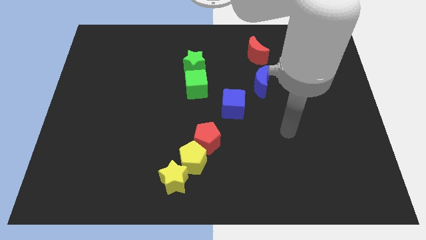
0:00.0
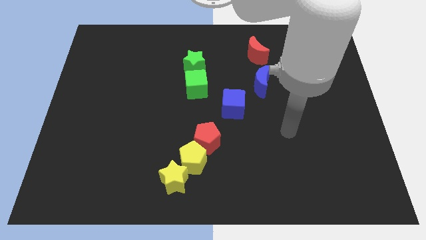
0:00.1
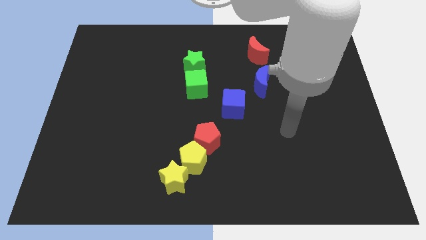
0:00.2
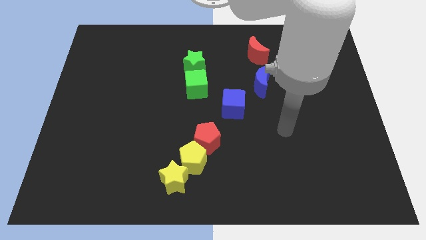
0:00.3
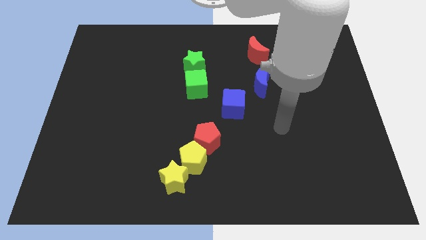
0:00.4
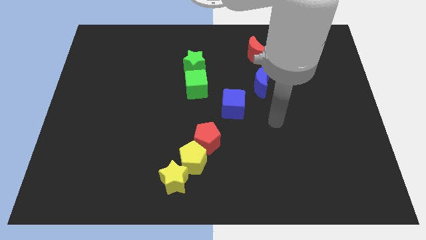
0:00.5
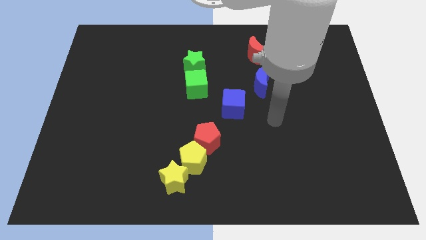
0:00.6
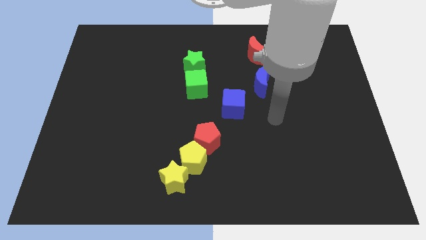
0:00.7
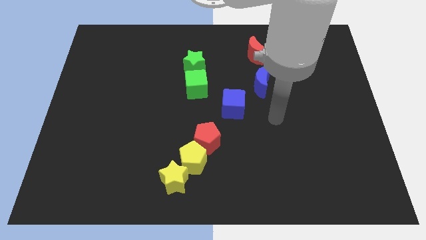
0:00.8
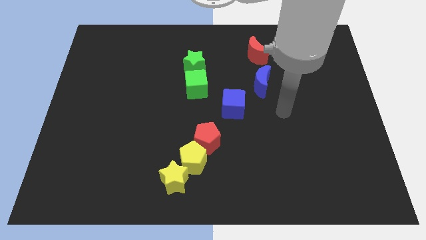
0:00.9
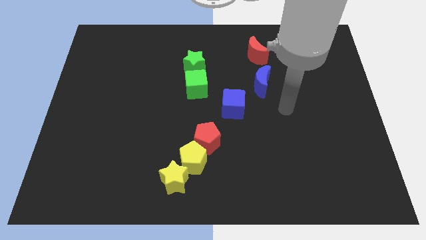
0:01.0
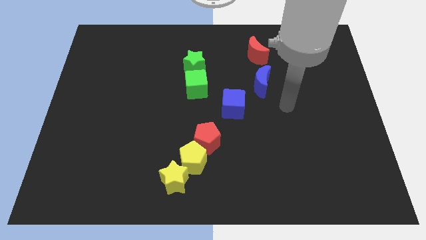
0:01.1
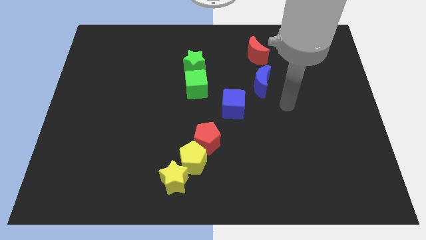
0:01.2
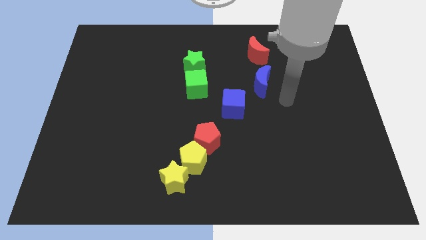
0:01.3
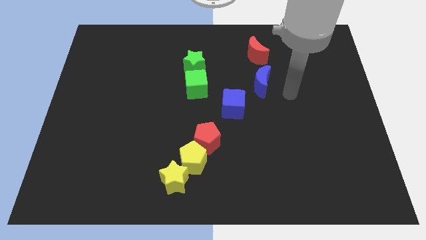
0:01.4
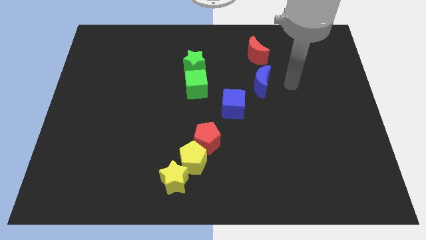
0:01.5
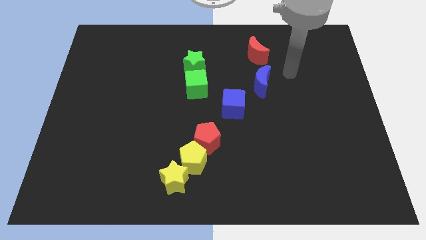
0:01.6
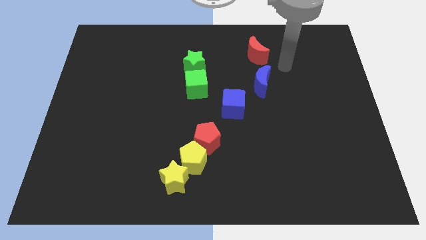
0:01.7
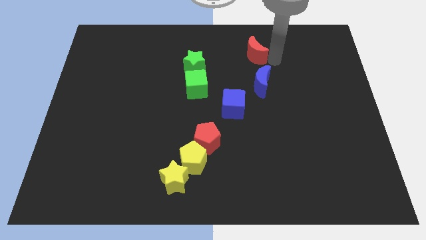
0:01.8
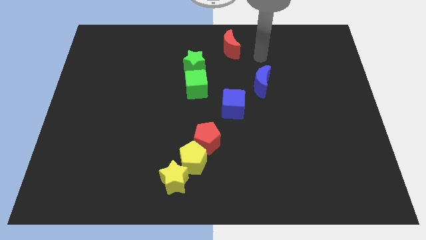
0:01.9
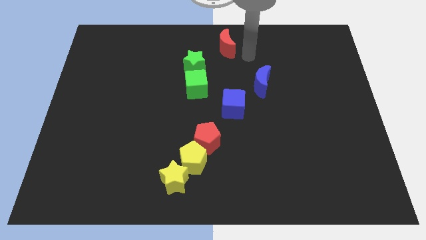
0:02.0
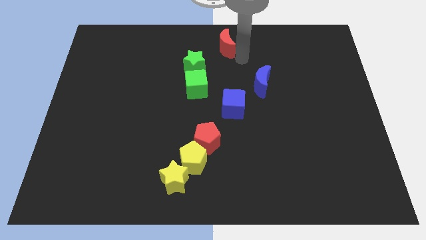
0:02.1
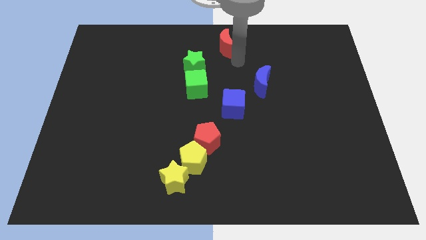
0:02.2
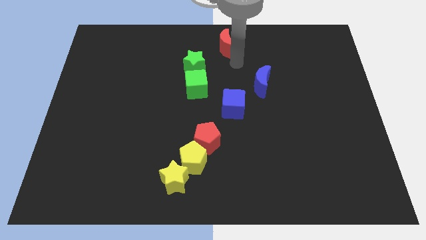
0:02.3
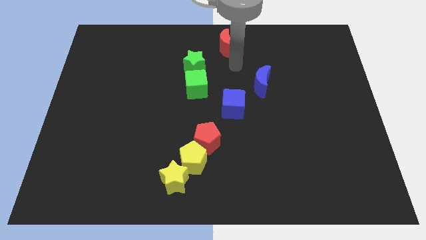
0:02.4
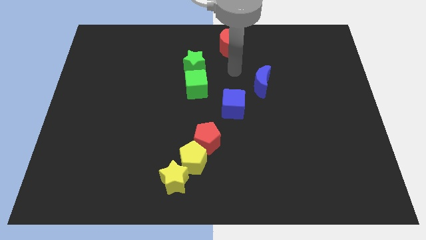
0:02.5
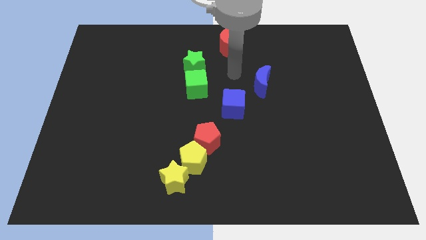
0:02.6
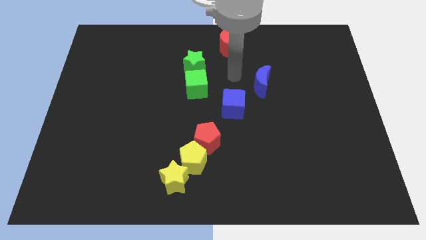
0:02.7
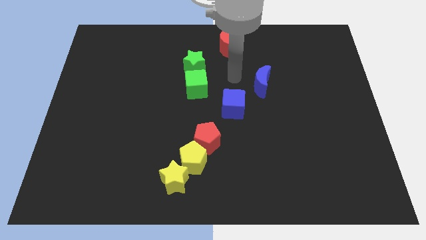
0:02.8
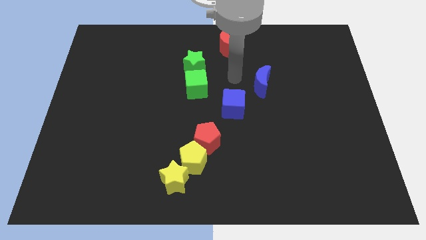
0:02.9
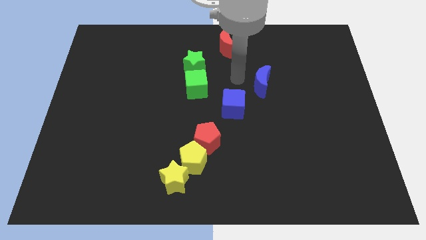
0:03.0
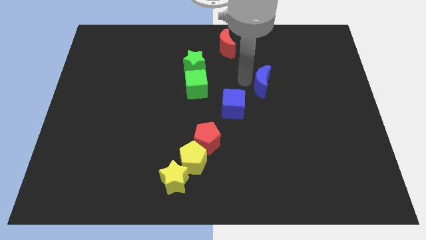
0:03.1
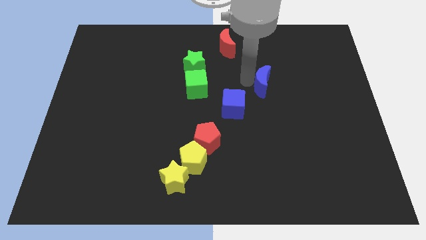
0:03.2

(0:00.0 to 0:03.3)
place red crescent above blue cube

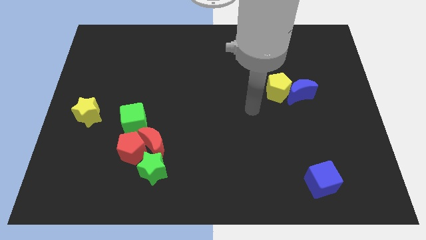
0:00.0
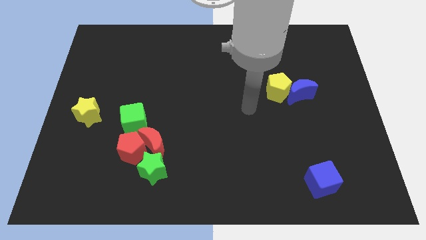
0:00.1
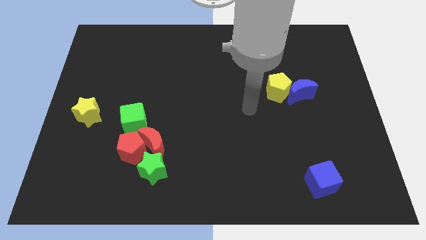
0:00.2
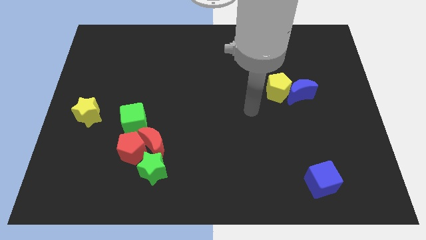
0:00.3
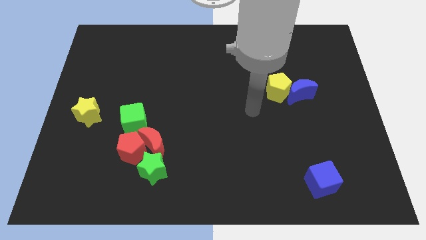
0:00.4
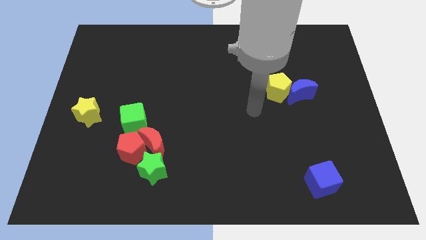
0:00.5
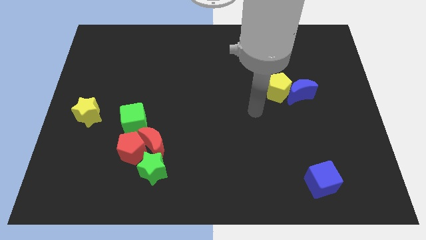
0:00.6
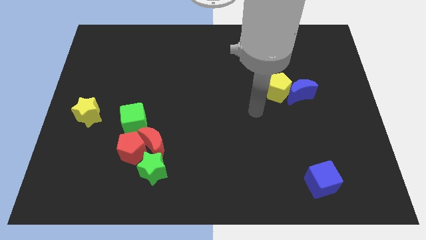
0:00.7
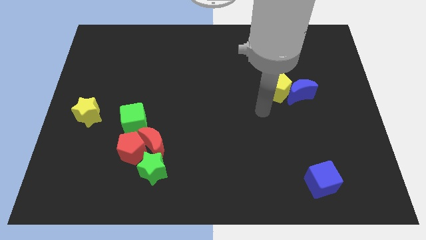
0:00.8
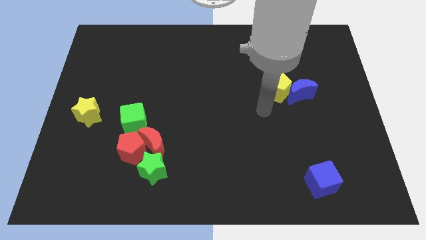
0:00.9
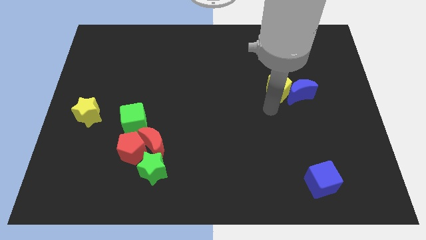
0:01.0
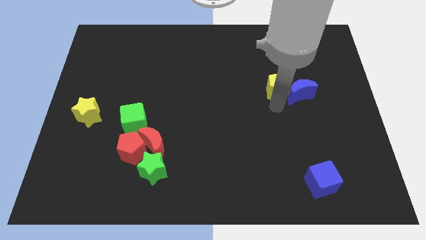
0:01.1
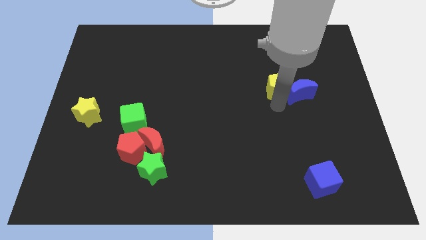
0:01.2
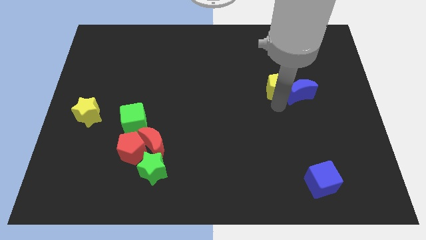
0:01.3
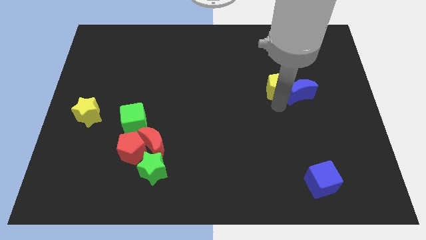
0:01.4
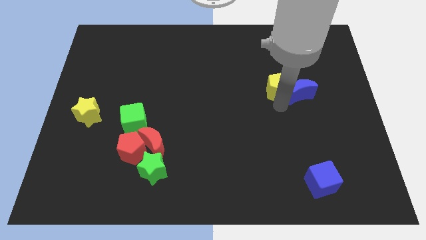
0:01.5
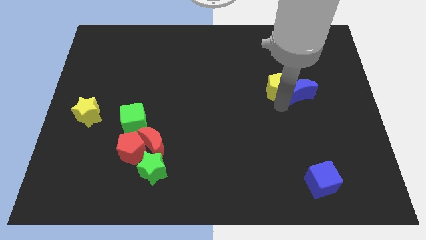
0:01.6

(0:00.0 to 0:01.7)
move your arm towards the bottom of the yellow pentagon

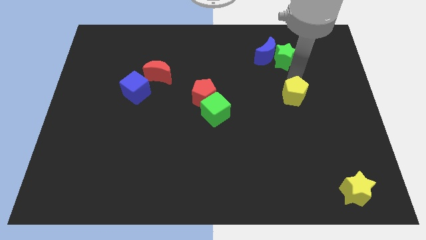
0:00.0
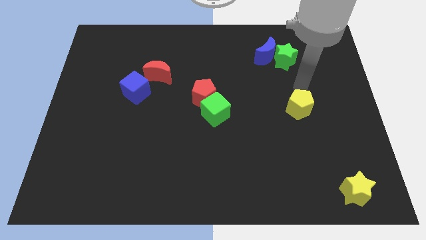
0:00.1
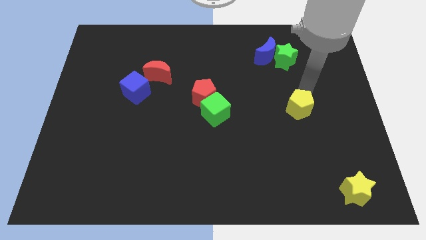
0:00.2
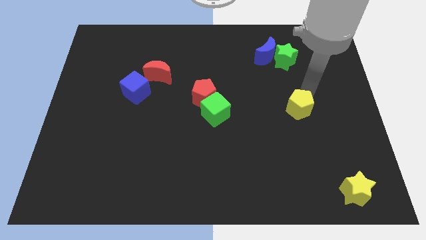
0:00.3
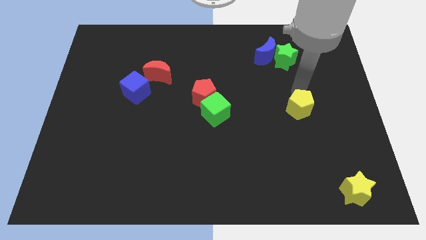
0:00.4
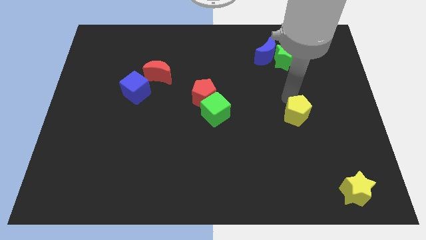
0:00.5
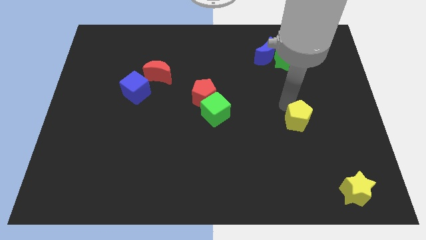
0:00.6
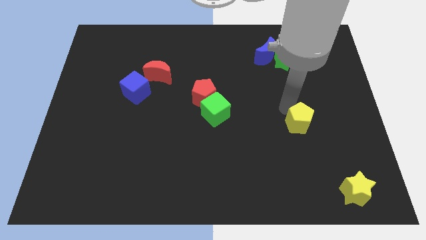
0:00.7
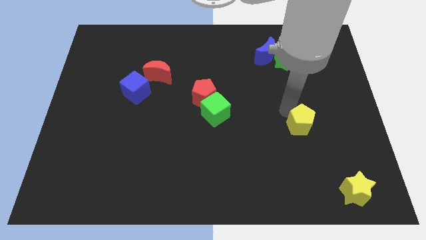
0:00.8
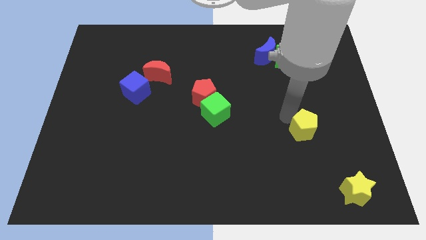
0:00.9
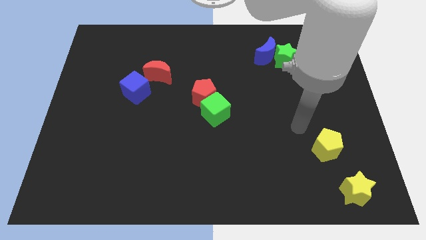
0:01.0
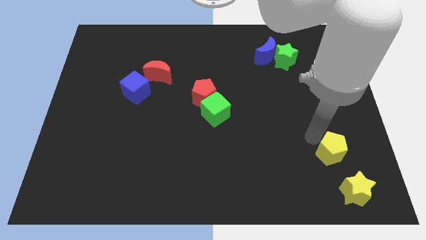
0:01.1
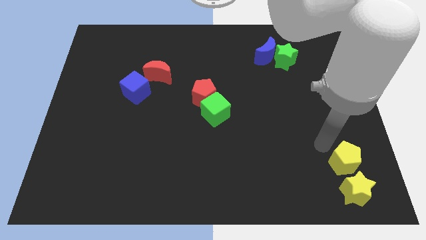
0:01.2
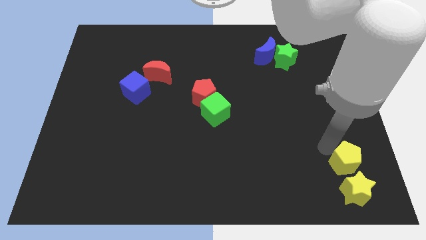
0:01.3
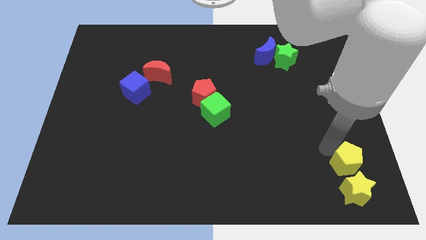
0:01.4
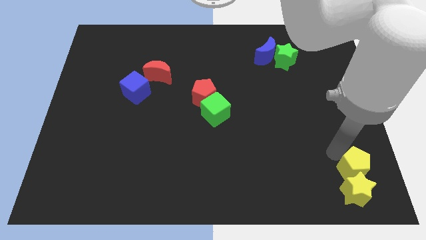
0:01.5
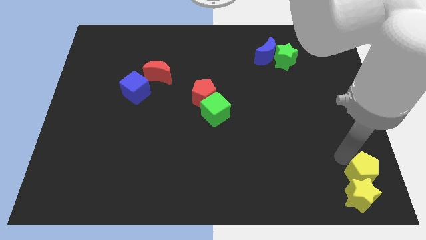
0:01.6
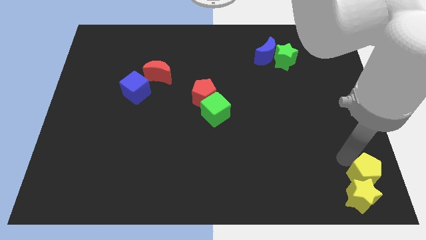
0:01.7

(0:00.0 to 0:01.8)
place the yellow pentagon on top of yellow star

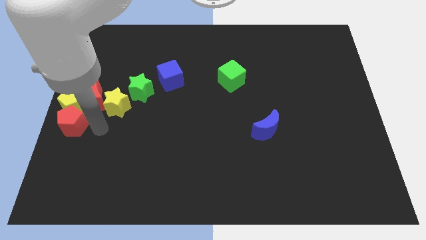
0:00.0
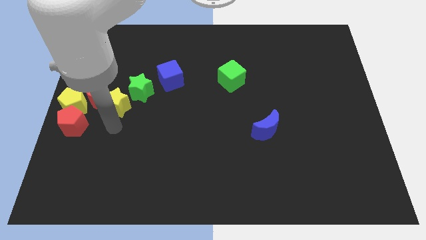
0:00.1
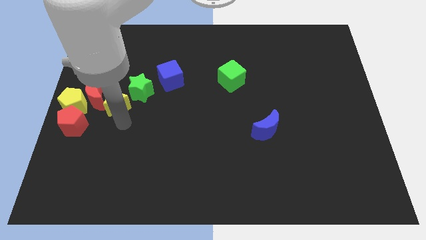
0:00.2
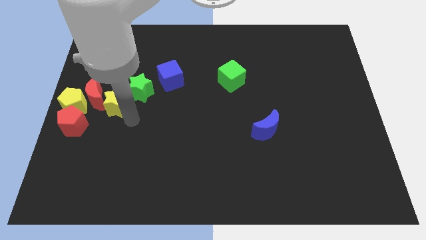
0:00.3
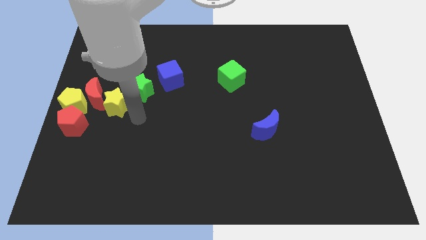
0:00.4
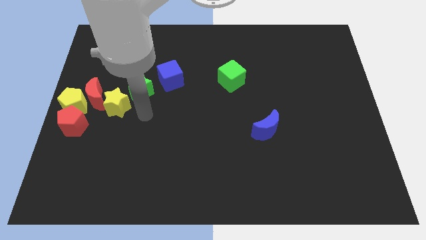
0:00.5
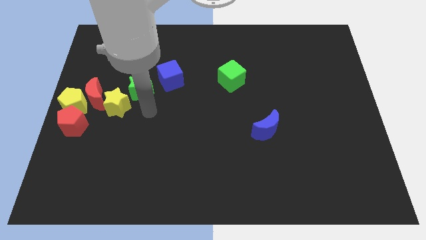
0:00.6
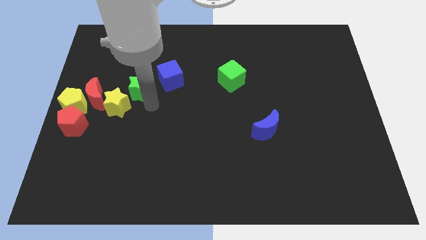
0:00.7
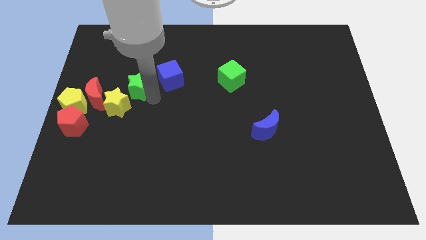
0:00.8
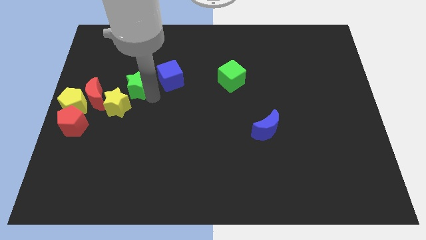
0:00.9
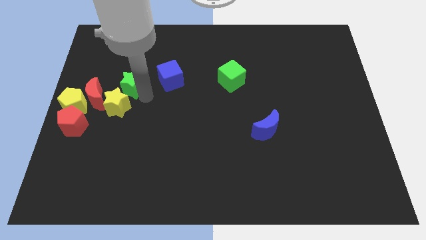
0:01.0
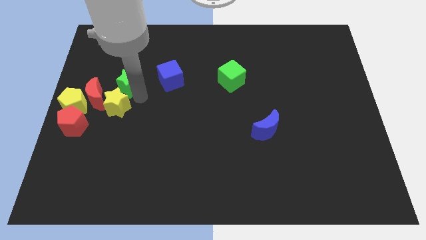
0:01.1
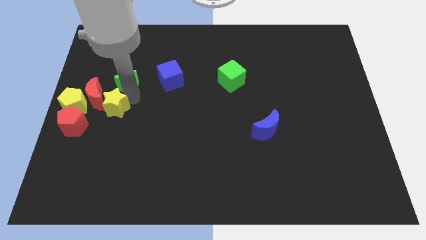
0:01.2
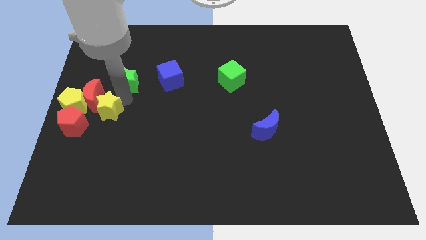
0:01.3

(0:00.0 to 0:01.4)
place the green star above the yellow star

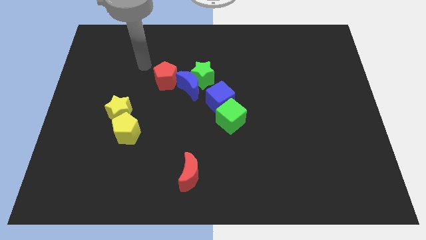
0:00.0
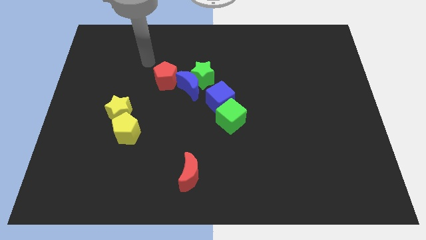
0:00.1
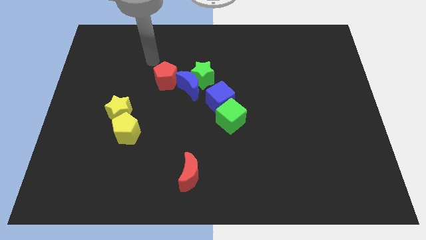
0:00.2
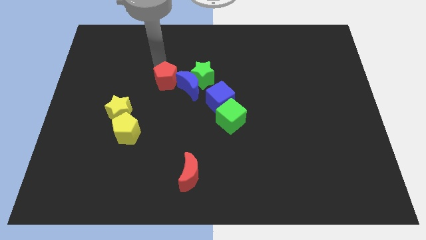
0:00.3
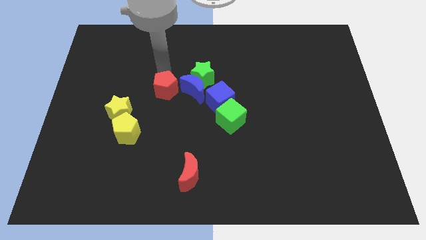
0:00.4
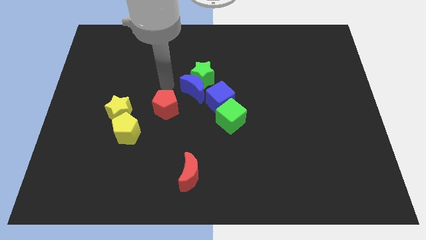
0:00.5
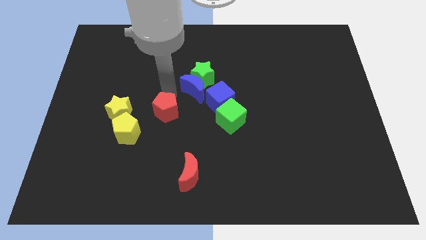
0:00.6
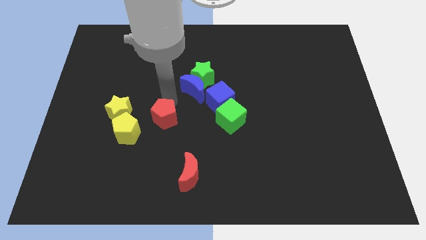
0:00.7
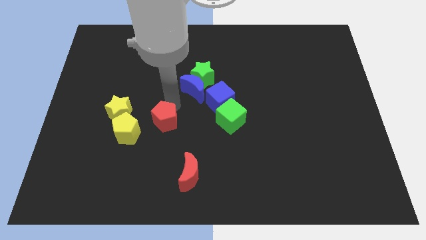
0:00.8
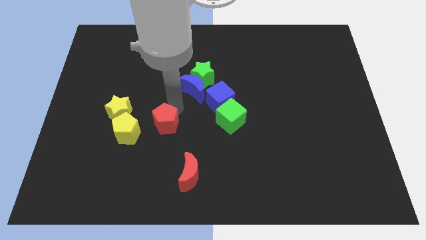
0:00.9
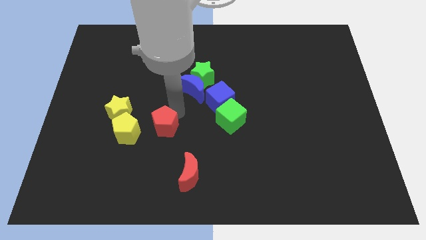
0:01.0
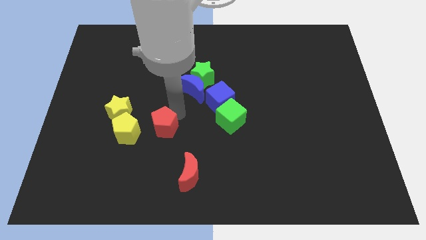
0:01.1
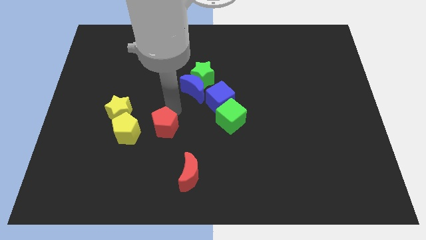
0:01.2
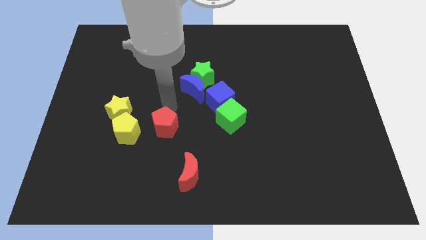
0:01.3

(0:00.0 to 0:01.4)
move the red pentagon right to the yellow pentagon
